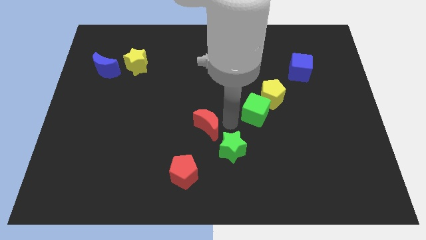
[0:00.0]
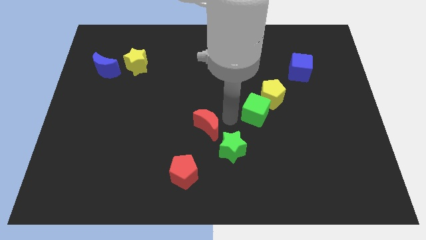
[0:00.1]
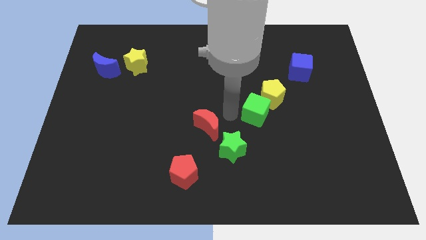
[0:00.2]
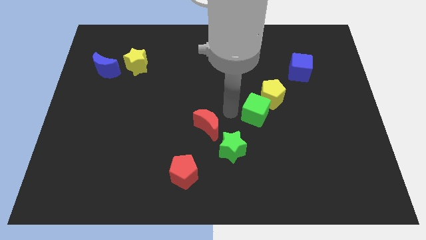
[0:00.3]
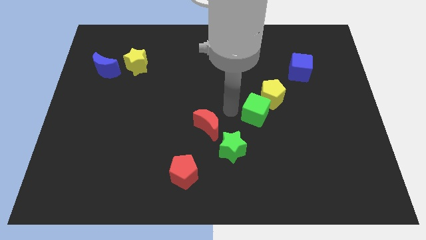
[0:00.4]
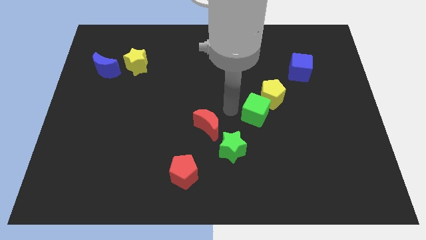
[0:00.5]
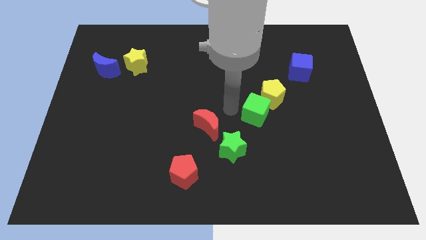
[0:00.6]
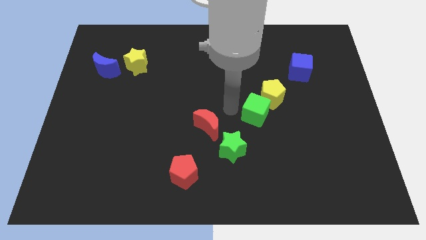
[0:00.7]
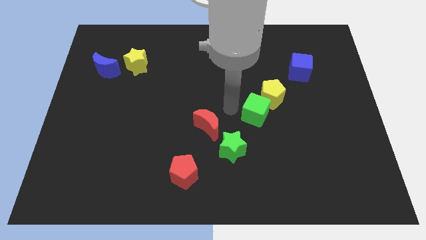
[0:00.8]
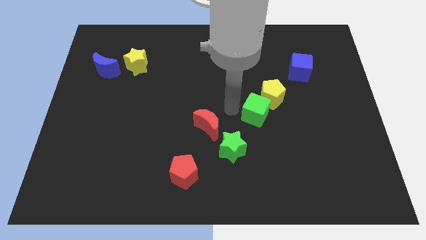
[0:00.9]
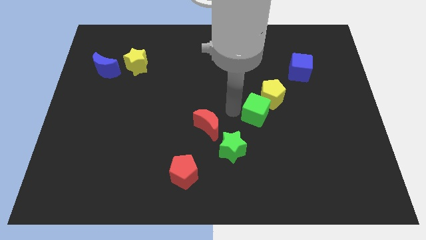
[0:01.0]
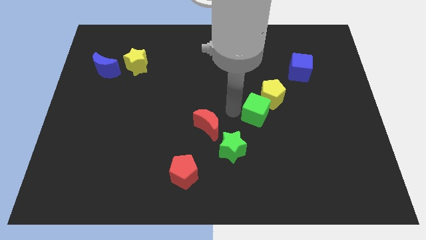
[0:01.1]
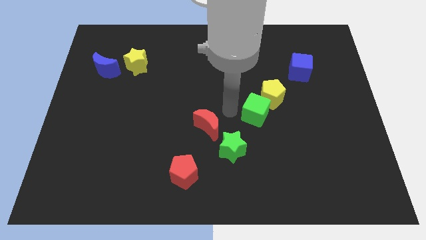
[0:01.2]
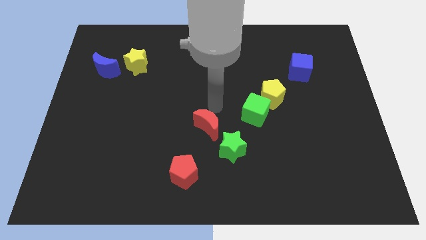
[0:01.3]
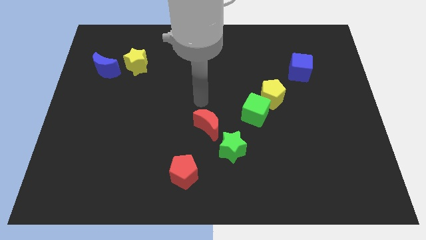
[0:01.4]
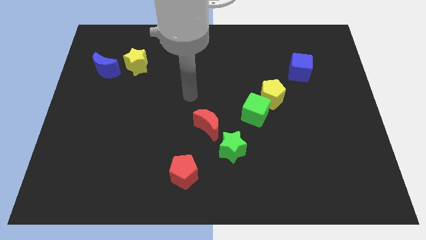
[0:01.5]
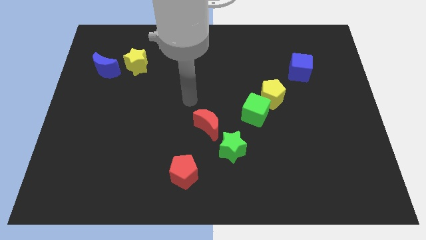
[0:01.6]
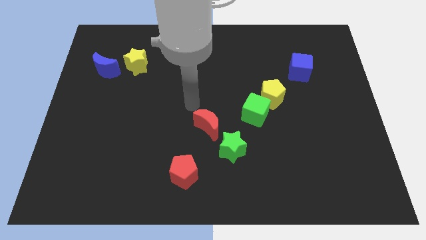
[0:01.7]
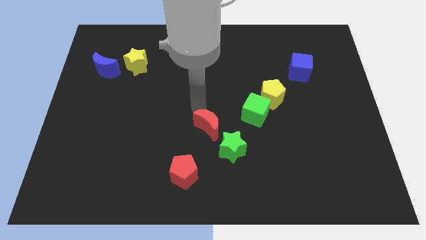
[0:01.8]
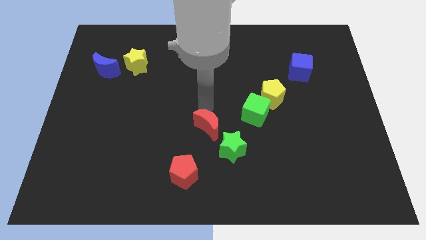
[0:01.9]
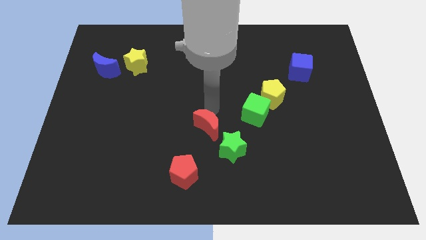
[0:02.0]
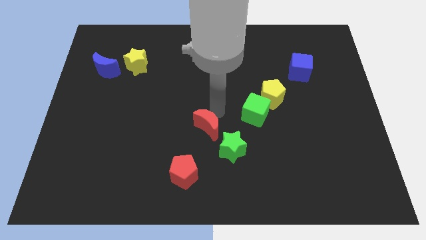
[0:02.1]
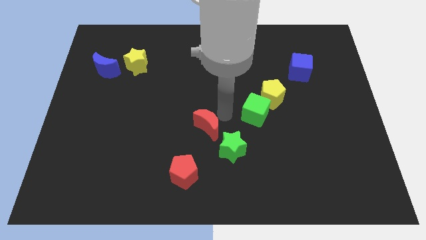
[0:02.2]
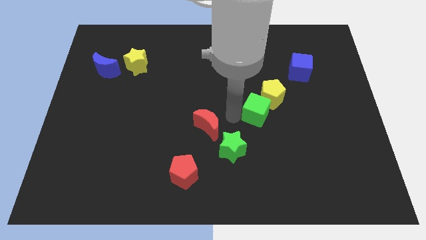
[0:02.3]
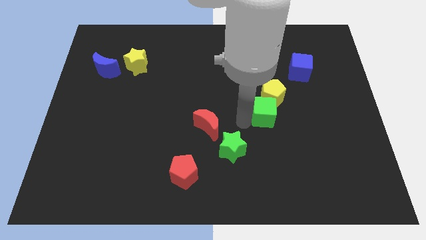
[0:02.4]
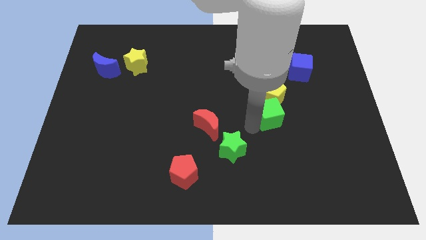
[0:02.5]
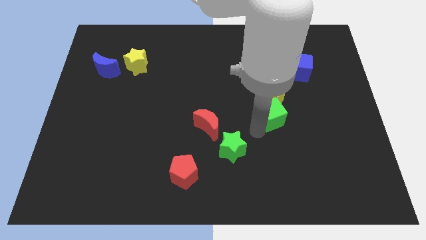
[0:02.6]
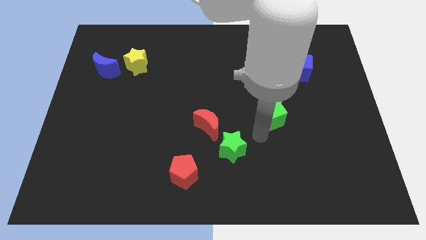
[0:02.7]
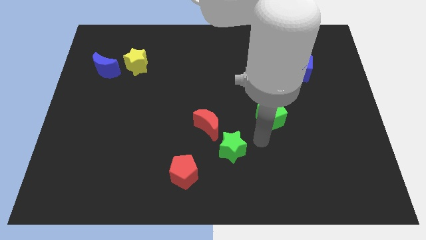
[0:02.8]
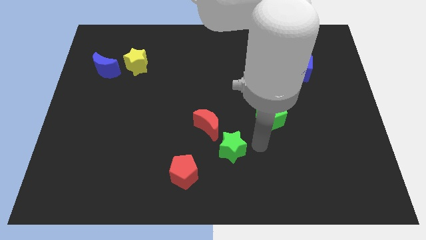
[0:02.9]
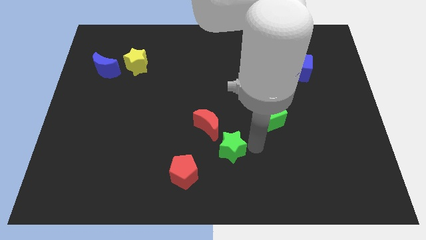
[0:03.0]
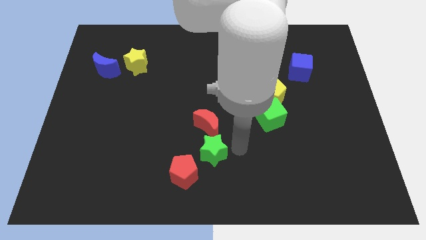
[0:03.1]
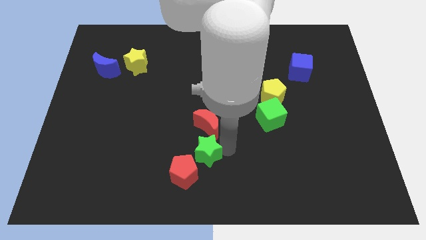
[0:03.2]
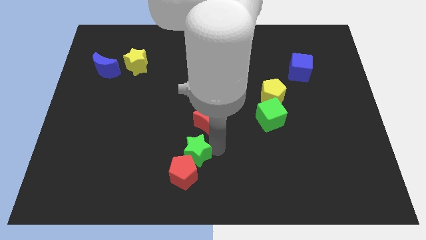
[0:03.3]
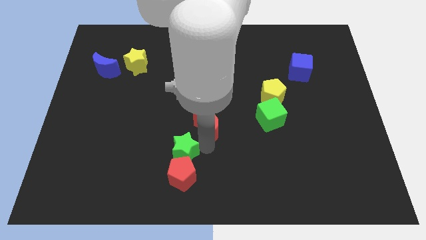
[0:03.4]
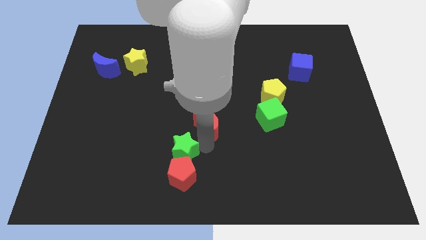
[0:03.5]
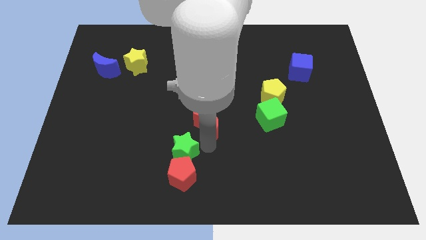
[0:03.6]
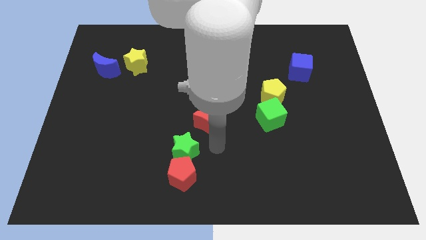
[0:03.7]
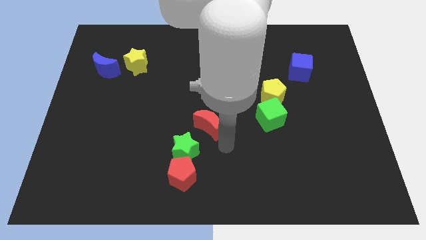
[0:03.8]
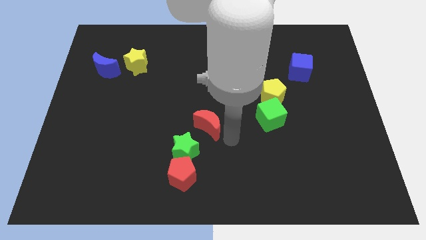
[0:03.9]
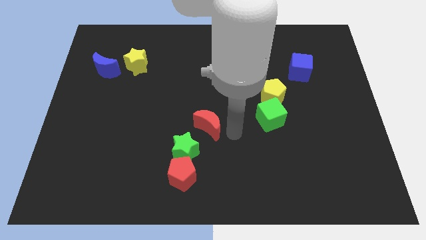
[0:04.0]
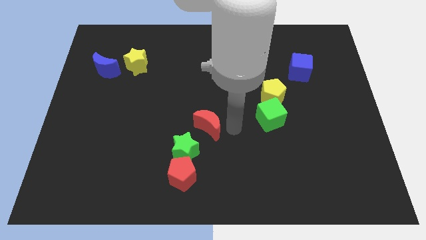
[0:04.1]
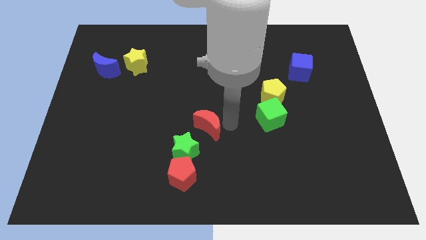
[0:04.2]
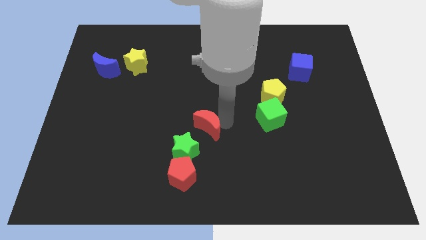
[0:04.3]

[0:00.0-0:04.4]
place green star in between red crescent and red pentagon

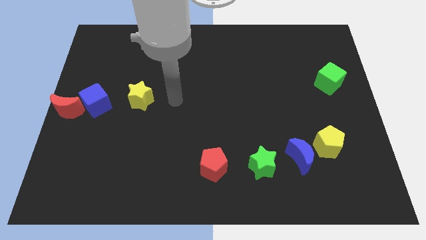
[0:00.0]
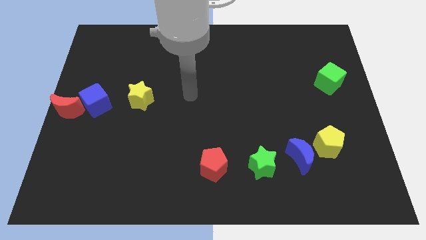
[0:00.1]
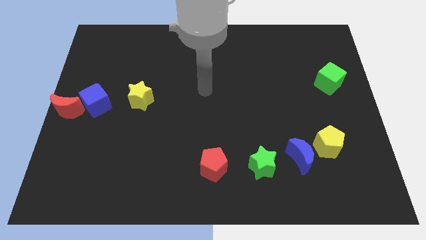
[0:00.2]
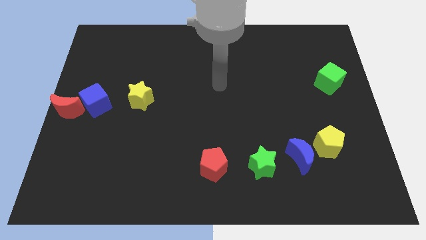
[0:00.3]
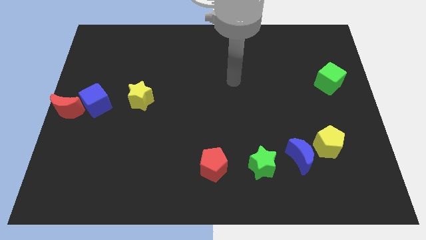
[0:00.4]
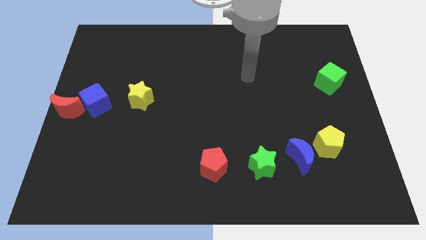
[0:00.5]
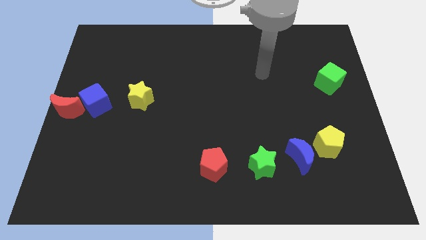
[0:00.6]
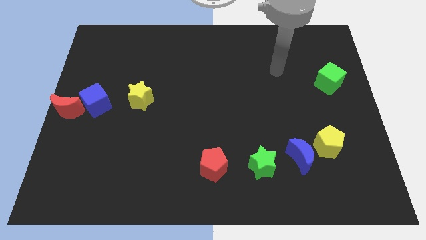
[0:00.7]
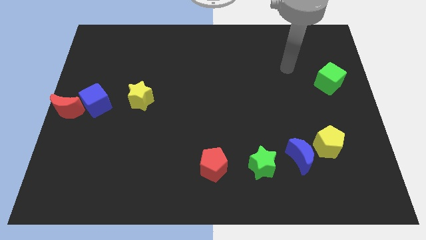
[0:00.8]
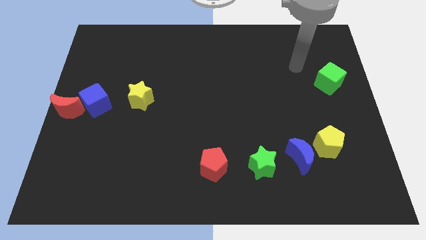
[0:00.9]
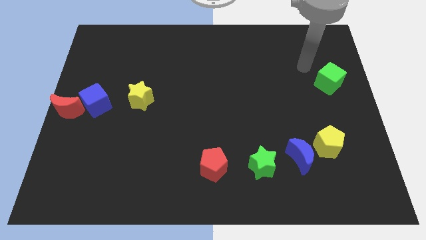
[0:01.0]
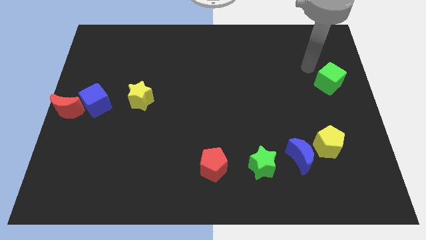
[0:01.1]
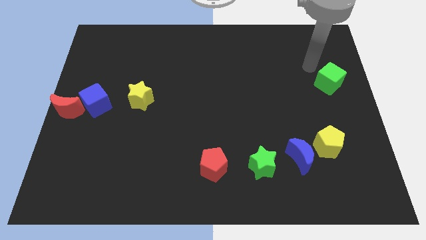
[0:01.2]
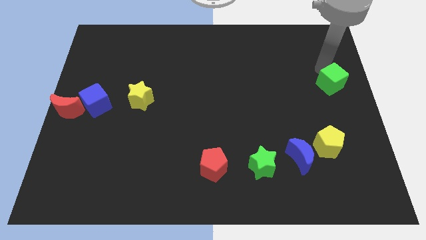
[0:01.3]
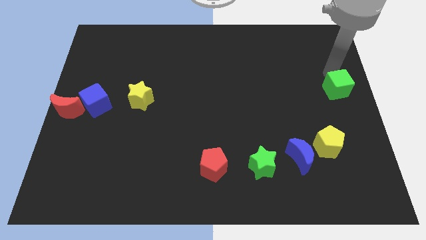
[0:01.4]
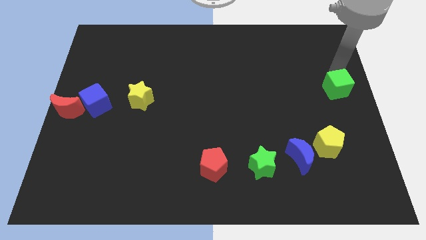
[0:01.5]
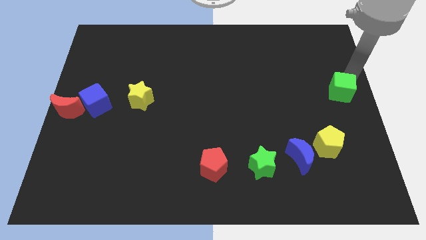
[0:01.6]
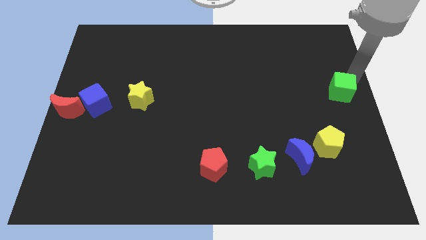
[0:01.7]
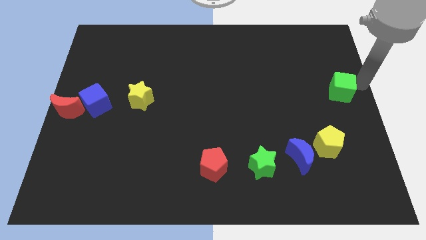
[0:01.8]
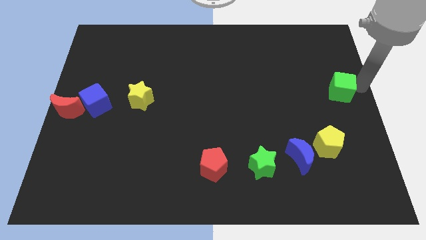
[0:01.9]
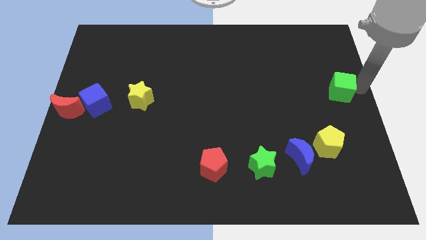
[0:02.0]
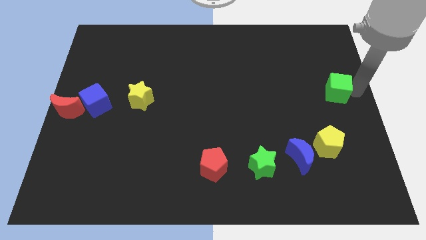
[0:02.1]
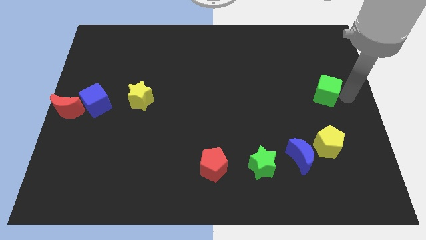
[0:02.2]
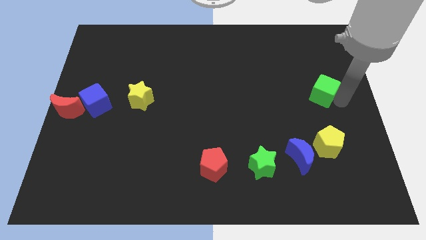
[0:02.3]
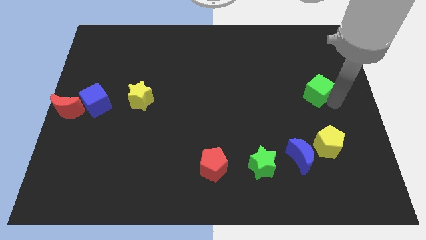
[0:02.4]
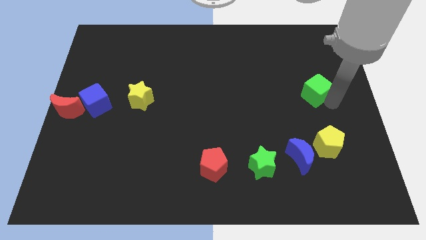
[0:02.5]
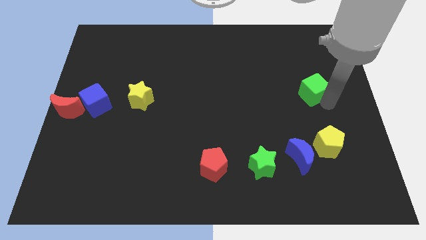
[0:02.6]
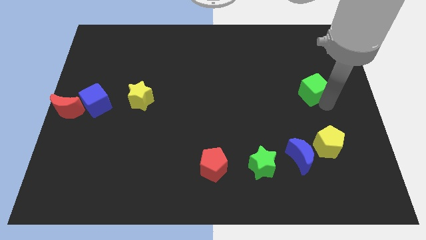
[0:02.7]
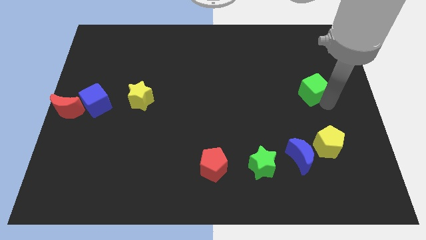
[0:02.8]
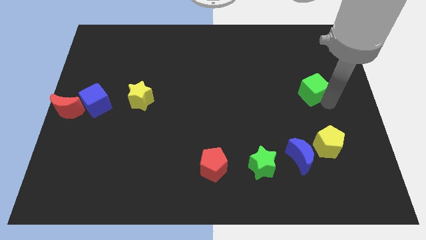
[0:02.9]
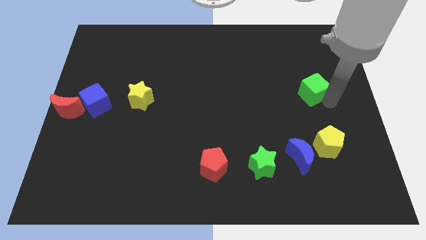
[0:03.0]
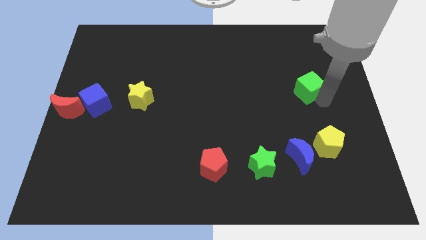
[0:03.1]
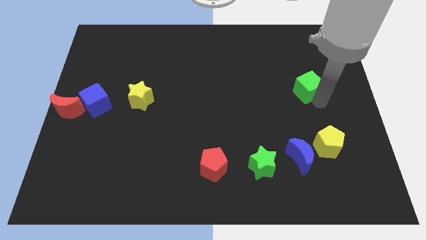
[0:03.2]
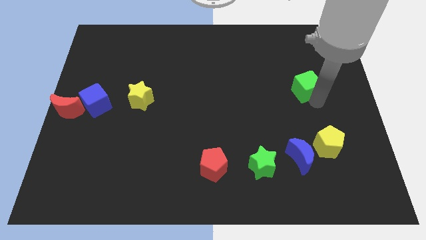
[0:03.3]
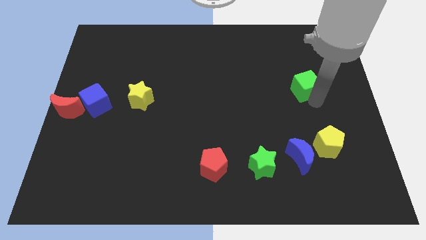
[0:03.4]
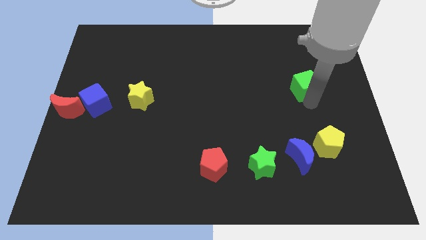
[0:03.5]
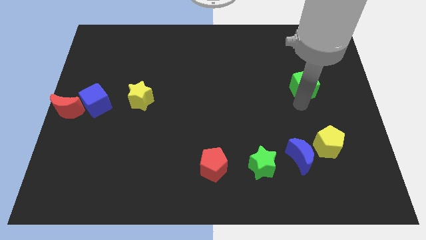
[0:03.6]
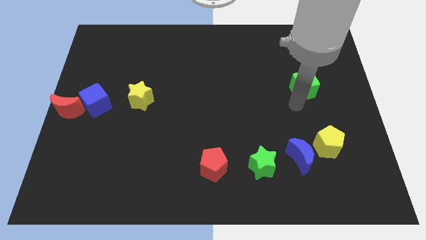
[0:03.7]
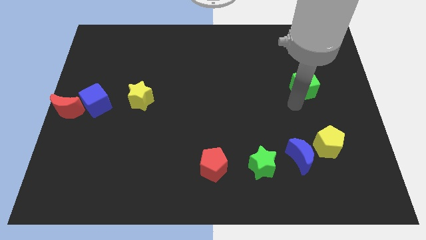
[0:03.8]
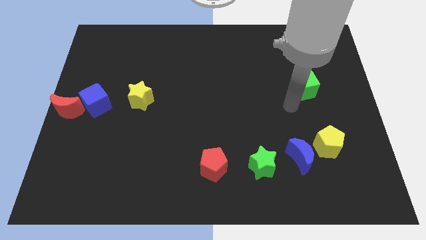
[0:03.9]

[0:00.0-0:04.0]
place the green cube at the top of the yellow pentagon

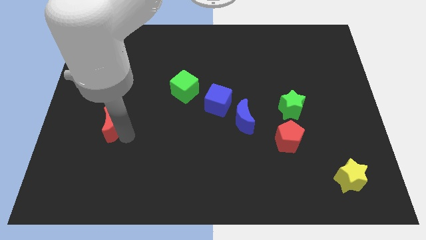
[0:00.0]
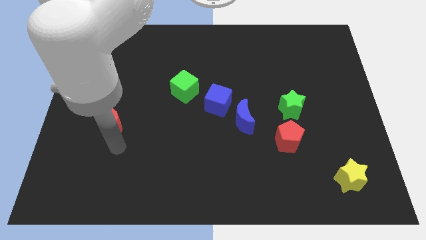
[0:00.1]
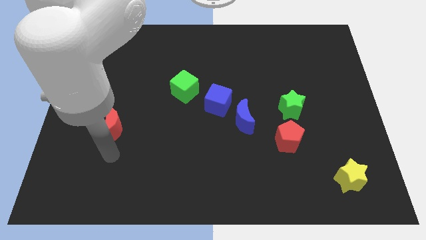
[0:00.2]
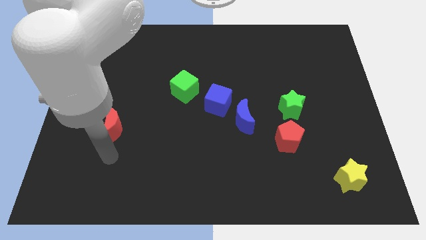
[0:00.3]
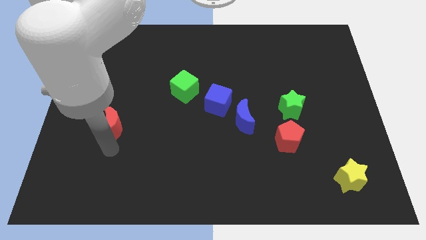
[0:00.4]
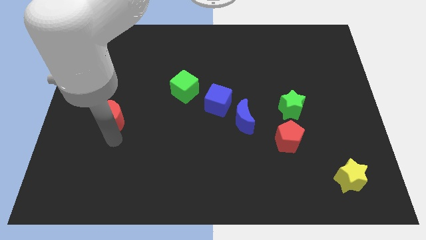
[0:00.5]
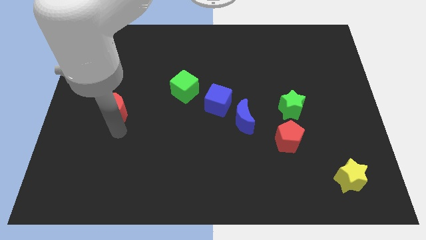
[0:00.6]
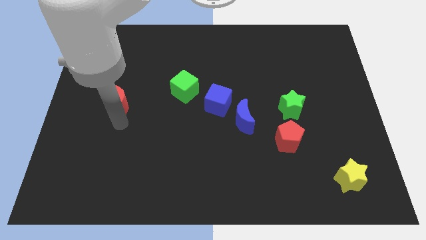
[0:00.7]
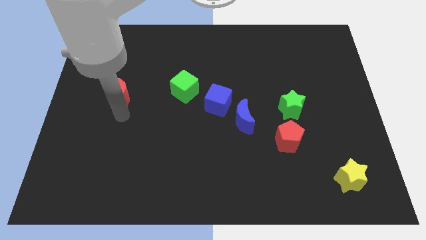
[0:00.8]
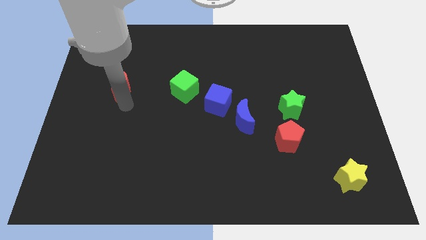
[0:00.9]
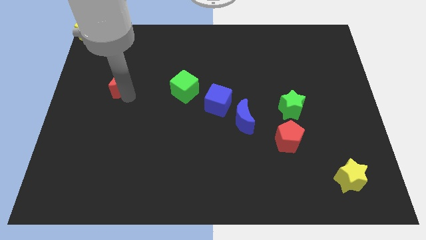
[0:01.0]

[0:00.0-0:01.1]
move the red moon parallel left to the green cube
